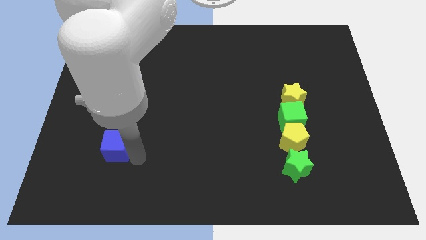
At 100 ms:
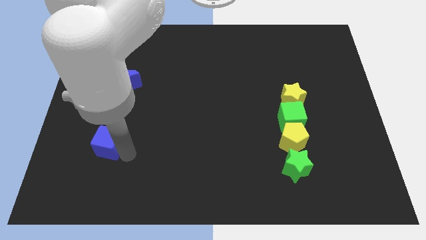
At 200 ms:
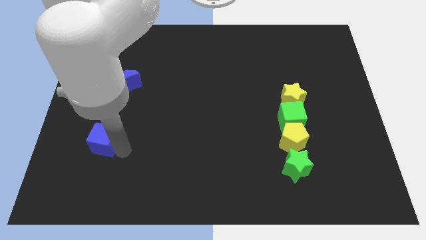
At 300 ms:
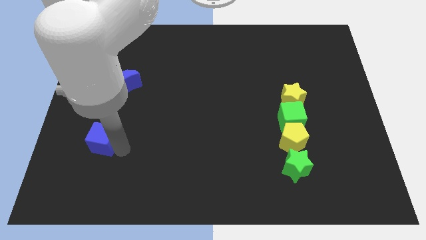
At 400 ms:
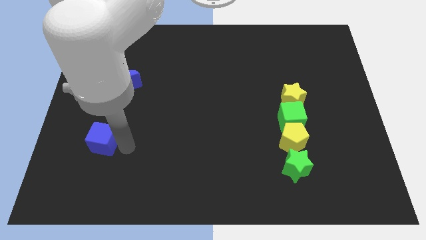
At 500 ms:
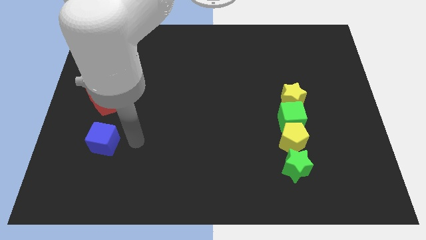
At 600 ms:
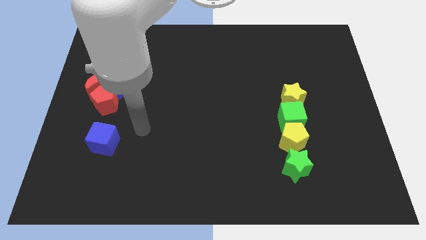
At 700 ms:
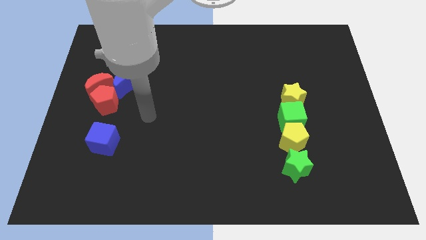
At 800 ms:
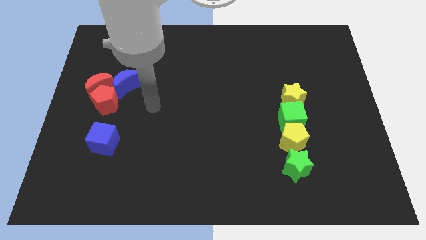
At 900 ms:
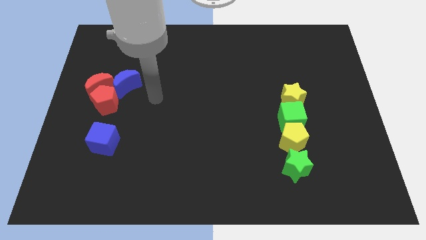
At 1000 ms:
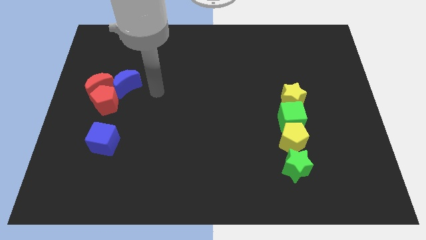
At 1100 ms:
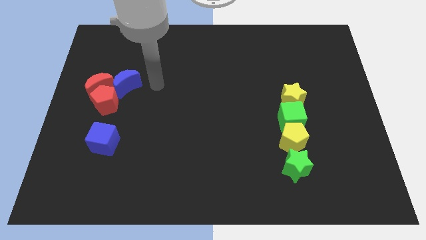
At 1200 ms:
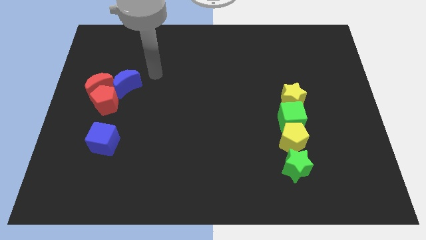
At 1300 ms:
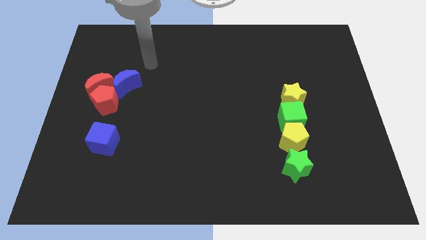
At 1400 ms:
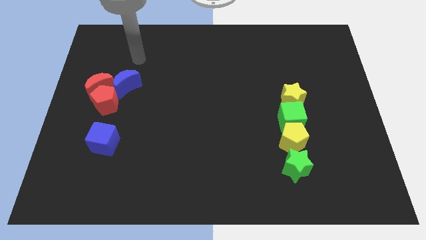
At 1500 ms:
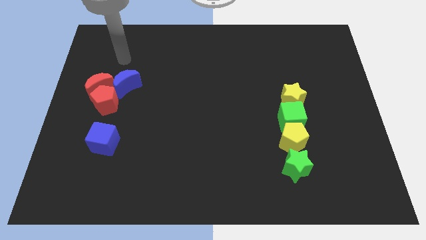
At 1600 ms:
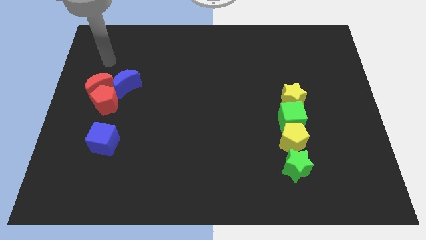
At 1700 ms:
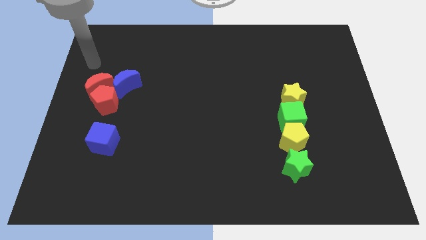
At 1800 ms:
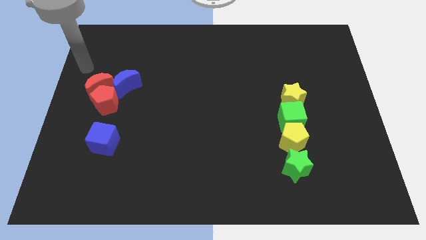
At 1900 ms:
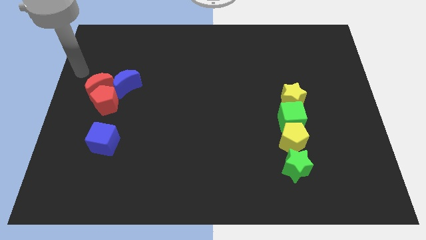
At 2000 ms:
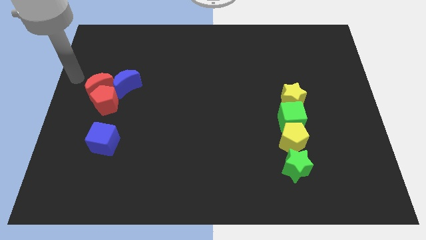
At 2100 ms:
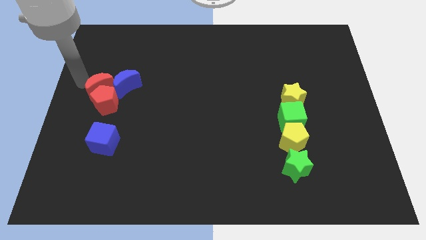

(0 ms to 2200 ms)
move the blue cube bottom to the red pentagon

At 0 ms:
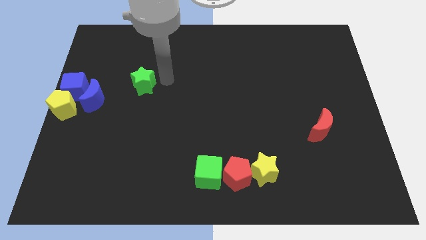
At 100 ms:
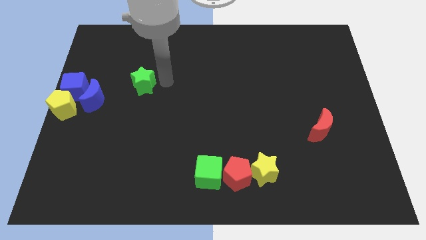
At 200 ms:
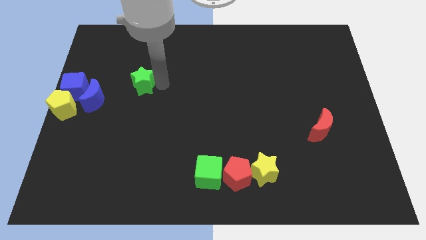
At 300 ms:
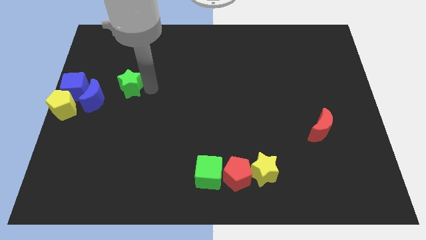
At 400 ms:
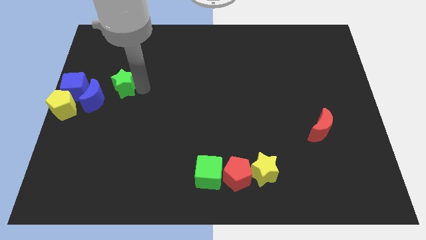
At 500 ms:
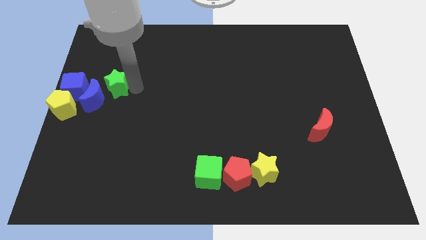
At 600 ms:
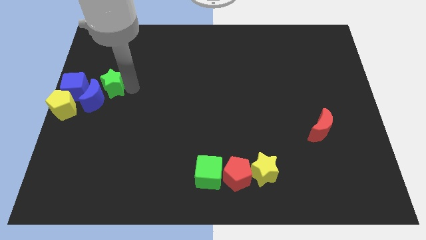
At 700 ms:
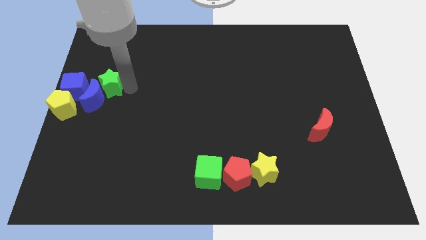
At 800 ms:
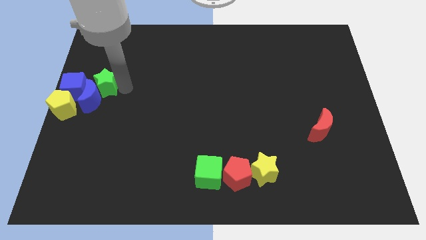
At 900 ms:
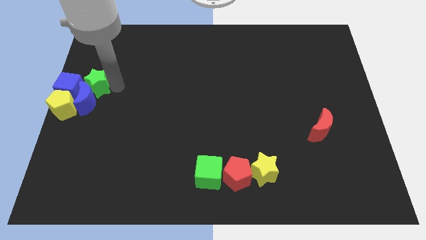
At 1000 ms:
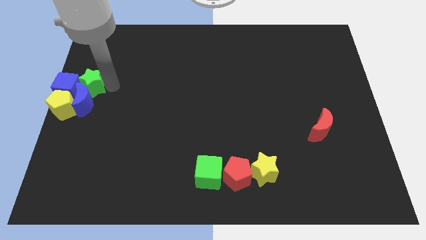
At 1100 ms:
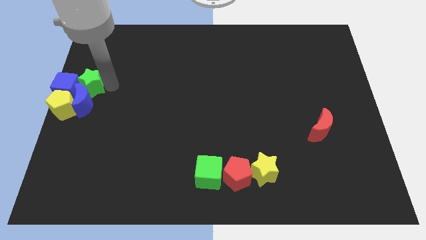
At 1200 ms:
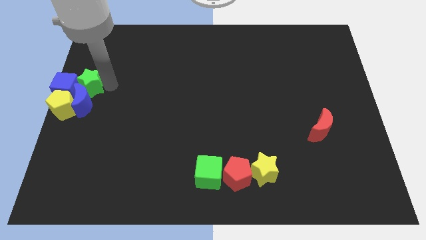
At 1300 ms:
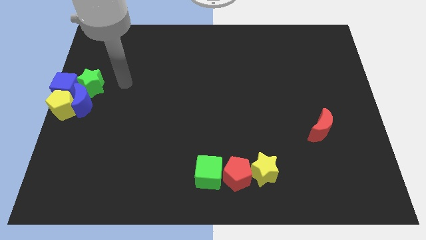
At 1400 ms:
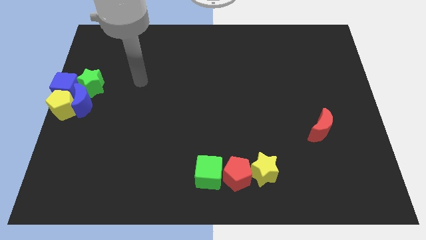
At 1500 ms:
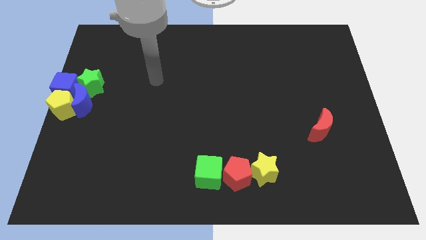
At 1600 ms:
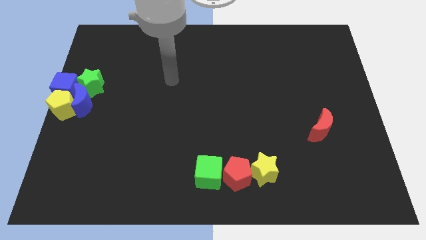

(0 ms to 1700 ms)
push the green star into the blue crescent

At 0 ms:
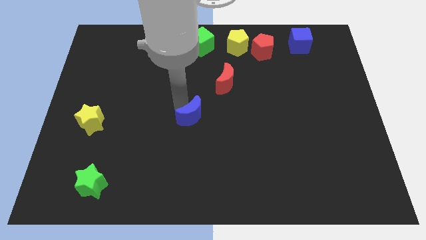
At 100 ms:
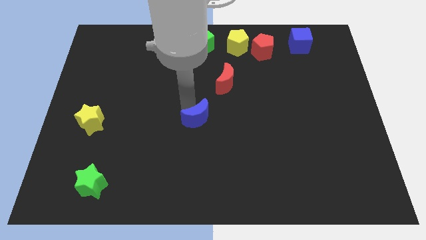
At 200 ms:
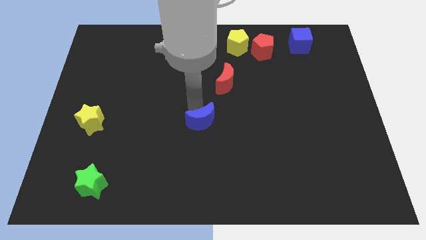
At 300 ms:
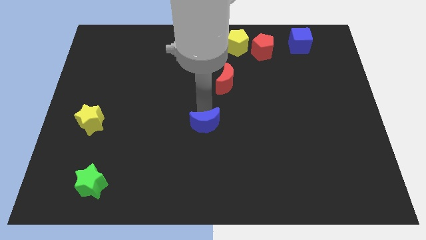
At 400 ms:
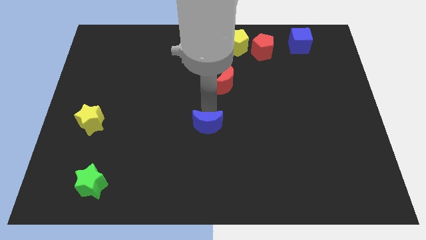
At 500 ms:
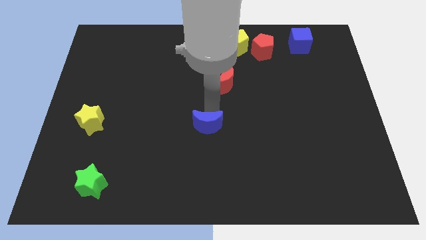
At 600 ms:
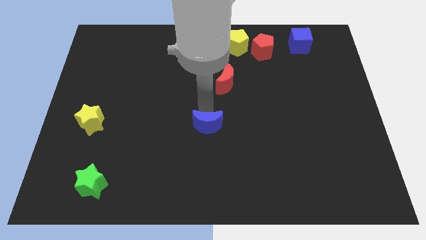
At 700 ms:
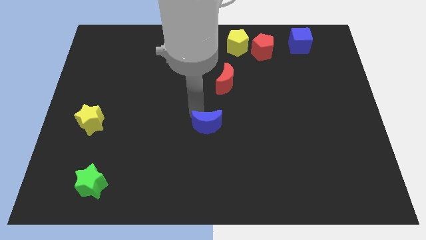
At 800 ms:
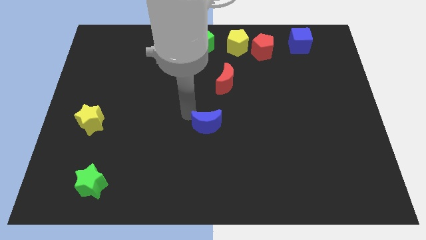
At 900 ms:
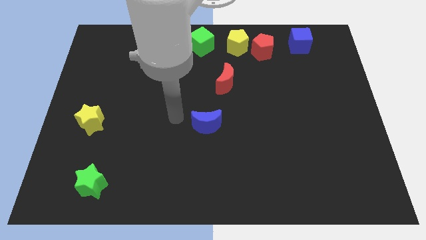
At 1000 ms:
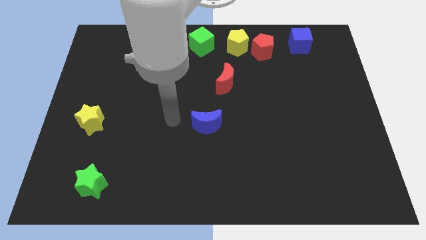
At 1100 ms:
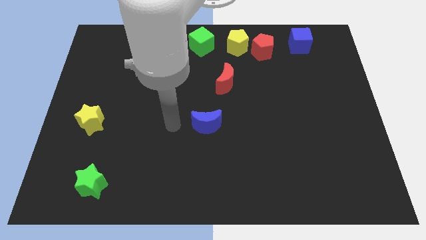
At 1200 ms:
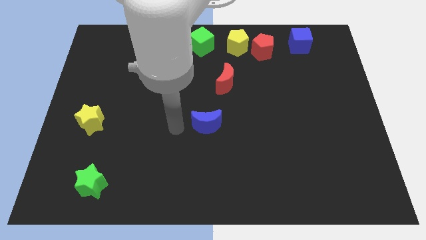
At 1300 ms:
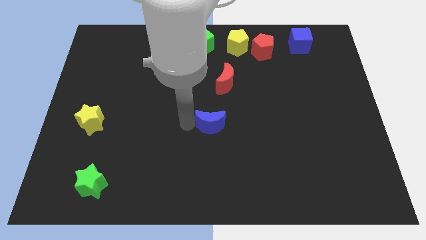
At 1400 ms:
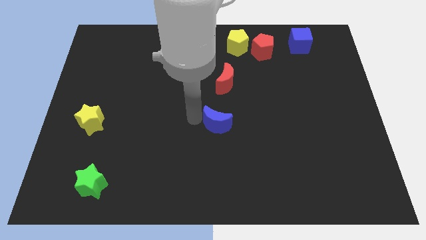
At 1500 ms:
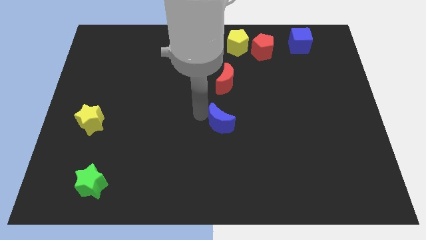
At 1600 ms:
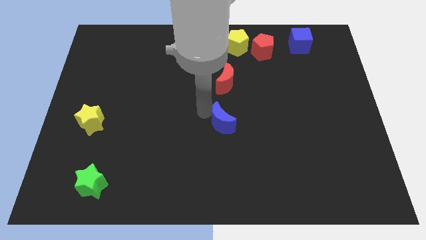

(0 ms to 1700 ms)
place the blue crescent below the red crescent

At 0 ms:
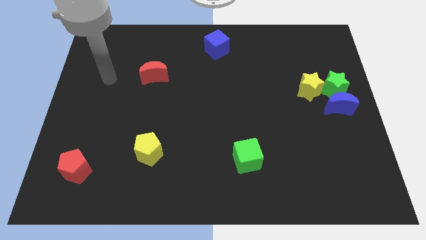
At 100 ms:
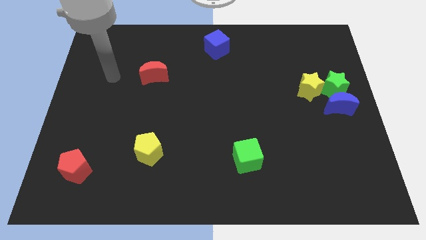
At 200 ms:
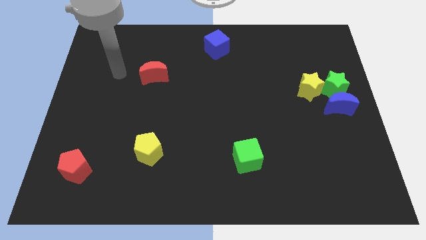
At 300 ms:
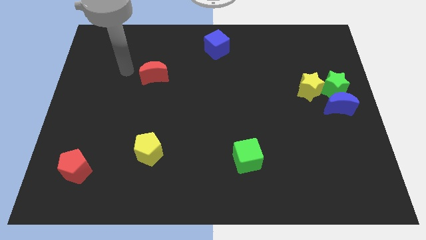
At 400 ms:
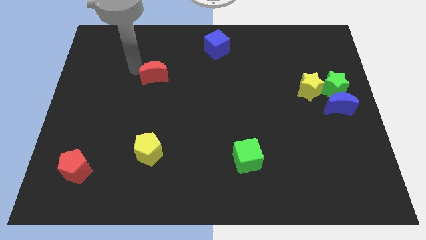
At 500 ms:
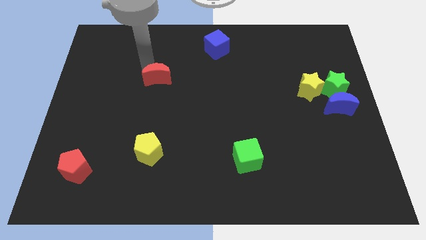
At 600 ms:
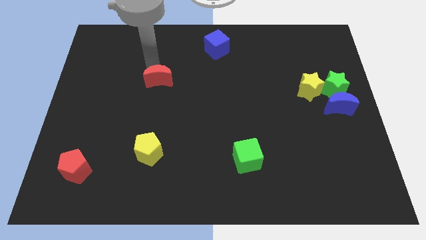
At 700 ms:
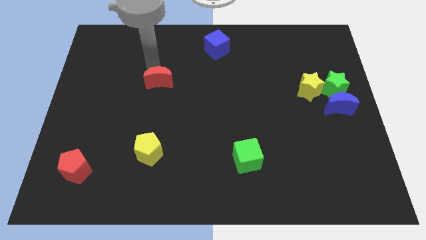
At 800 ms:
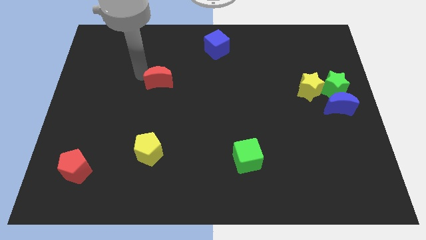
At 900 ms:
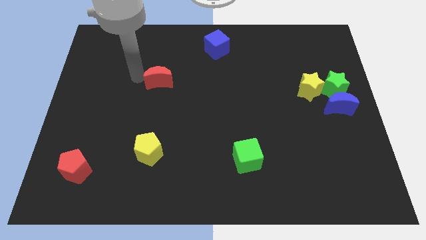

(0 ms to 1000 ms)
move the red moon slightly down

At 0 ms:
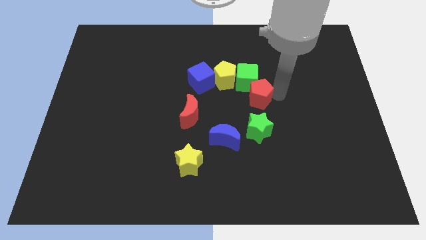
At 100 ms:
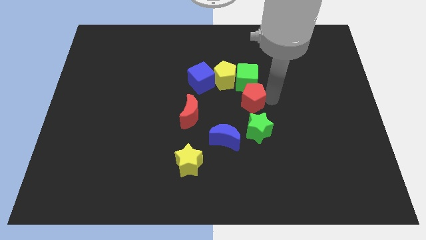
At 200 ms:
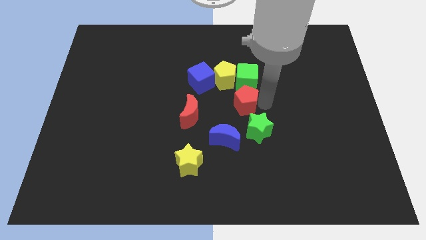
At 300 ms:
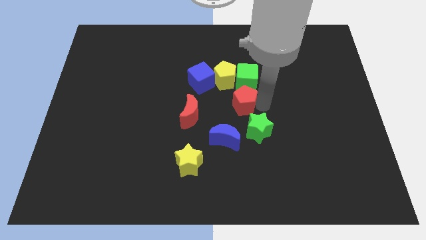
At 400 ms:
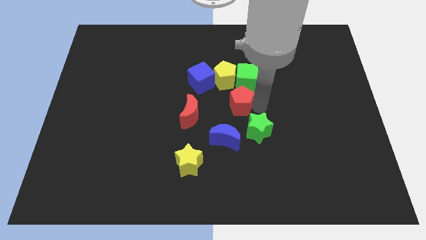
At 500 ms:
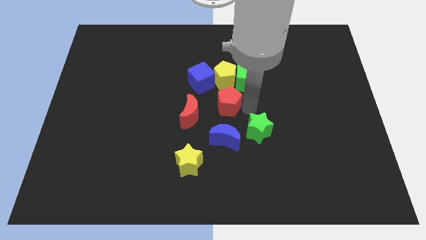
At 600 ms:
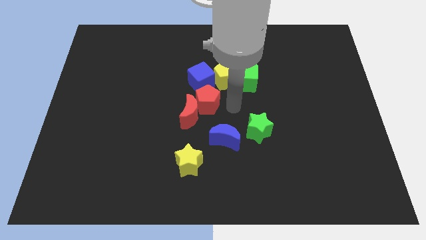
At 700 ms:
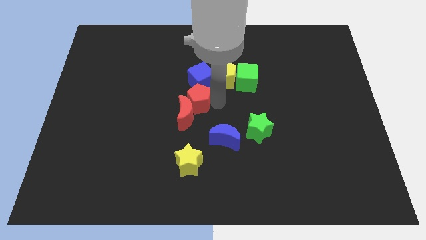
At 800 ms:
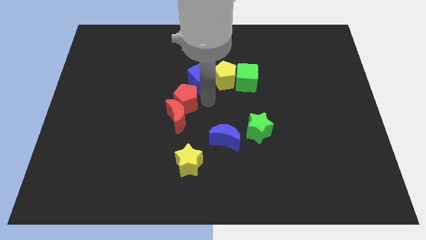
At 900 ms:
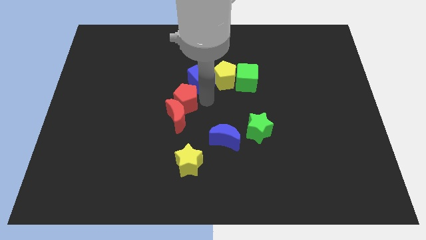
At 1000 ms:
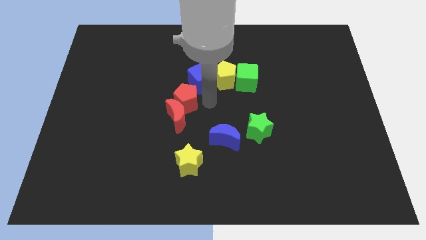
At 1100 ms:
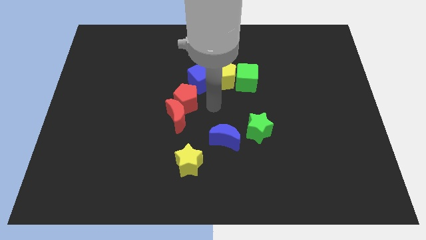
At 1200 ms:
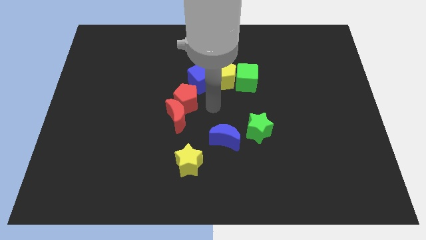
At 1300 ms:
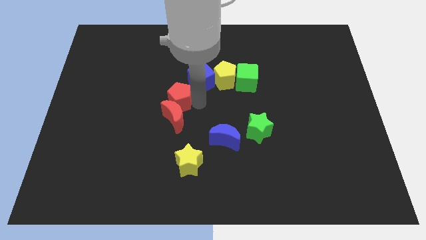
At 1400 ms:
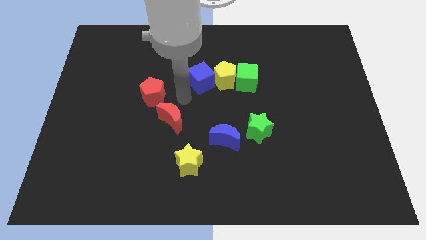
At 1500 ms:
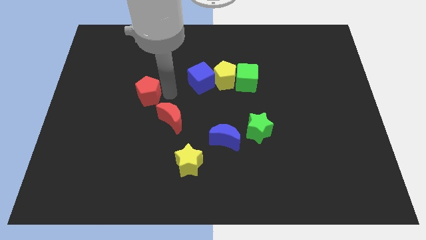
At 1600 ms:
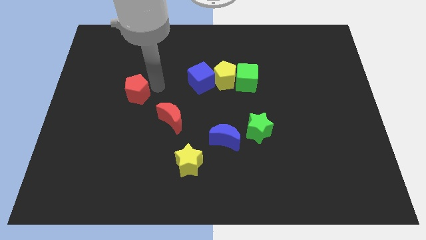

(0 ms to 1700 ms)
push the redd pentagon into the red moon

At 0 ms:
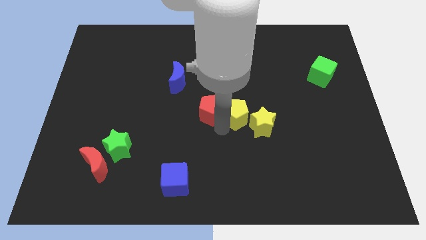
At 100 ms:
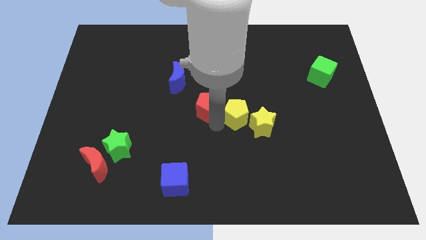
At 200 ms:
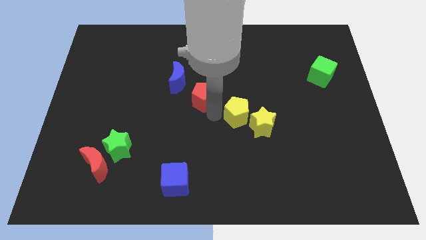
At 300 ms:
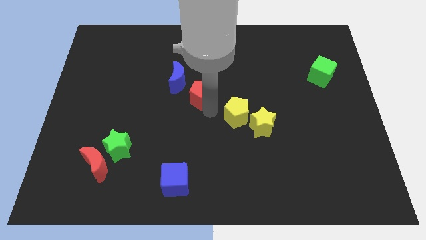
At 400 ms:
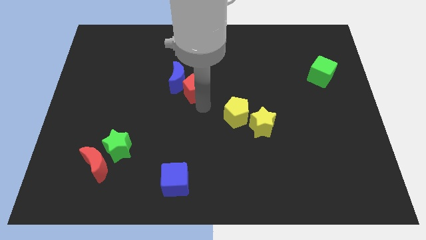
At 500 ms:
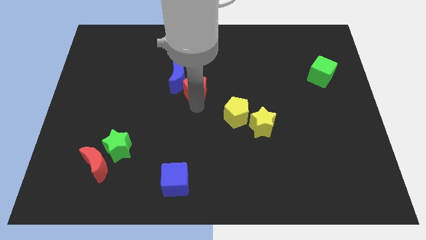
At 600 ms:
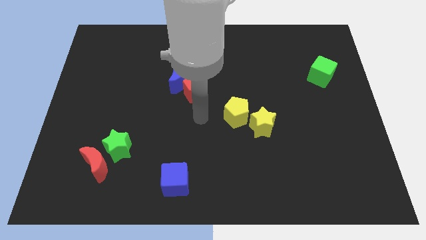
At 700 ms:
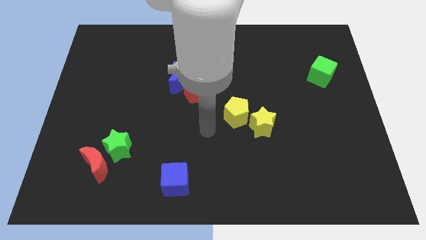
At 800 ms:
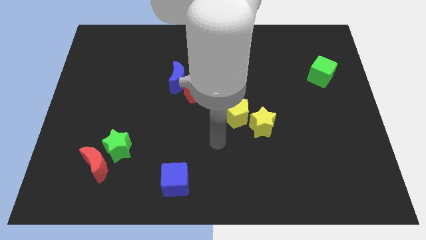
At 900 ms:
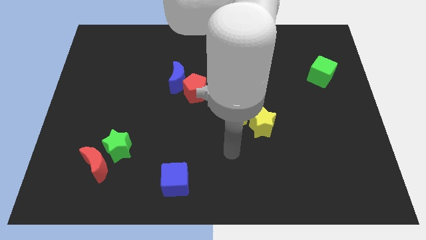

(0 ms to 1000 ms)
push the red pentagon bottom right to the blue crescent
